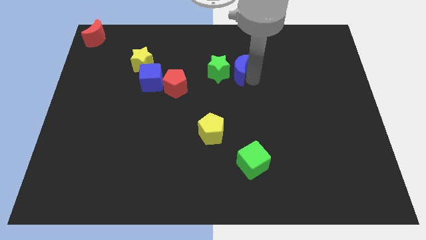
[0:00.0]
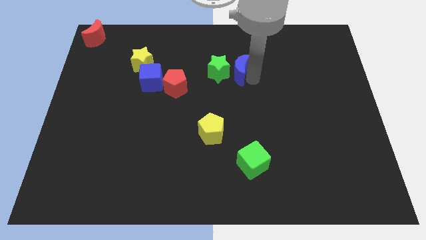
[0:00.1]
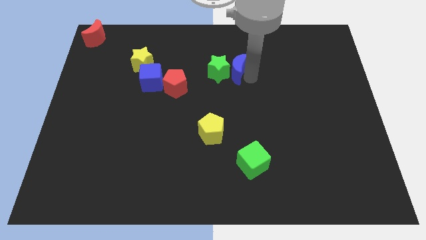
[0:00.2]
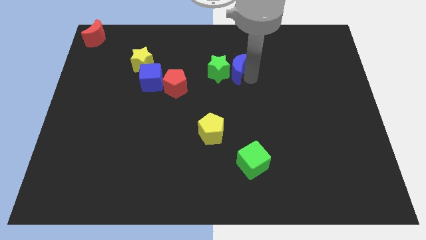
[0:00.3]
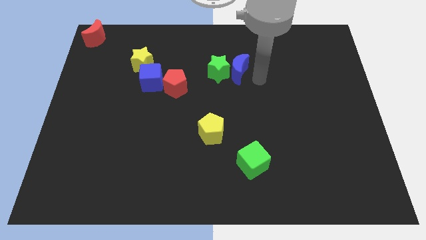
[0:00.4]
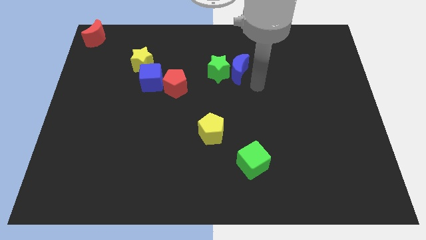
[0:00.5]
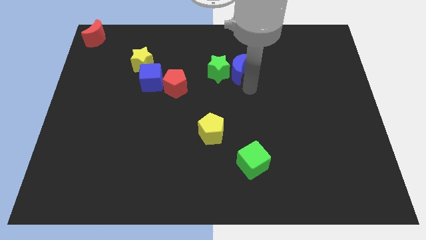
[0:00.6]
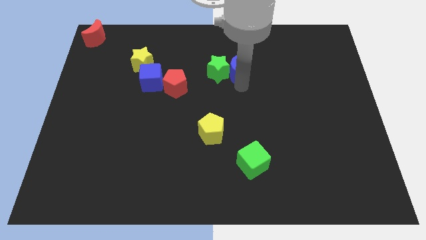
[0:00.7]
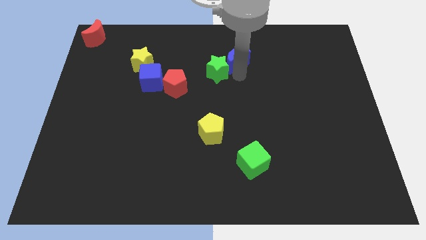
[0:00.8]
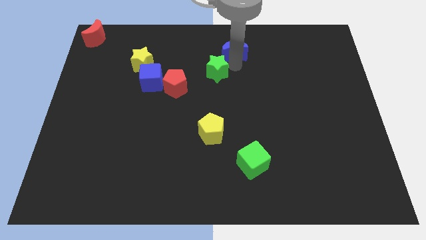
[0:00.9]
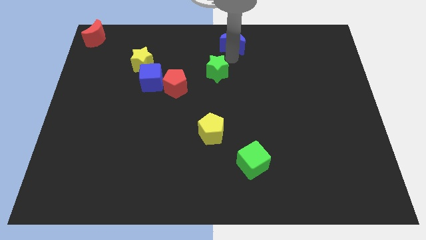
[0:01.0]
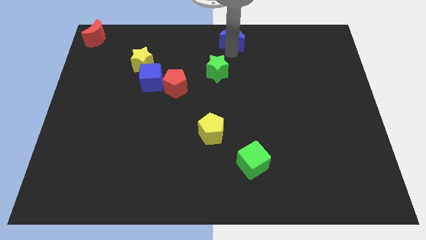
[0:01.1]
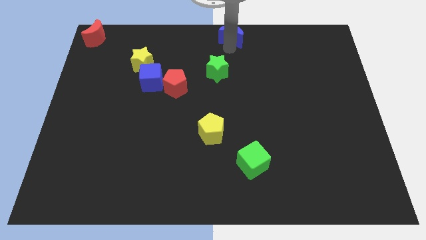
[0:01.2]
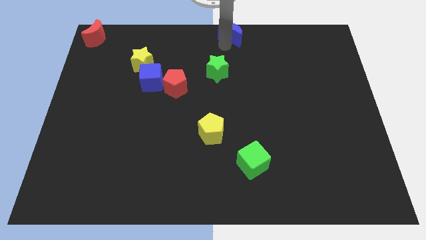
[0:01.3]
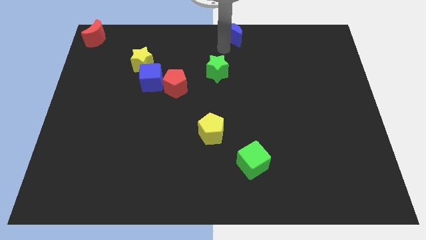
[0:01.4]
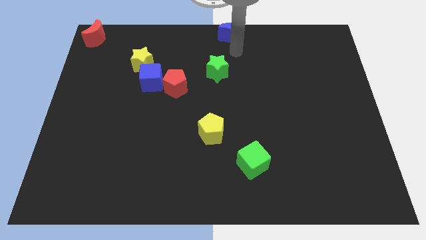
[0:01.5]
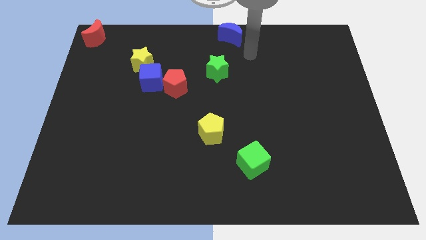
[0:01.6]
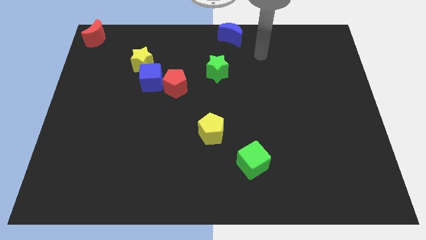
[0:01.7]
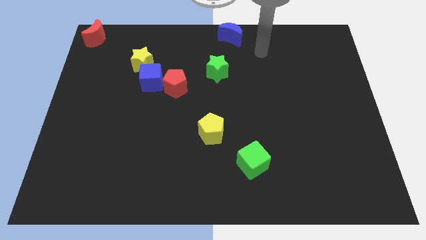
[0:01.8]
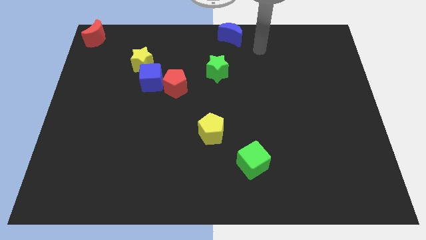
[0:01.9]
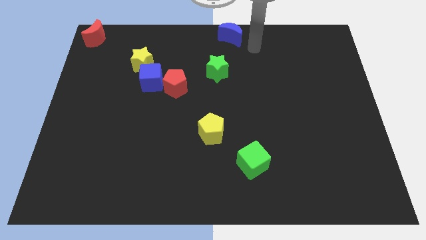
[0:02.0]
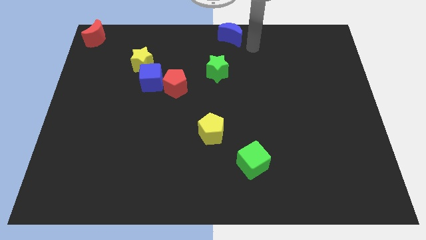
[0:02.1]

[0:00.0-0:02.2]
place the blue crescent at the top center

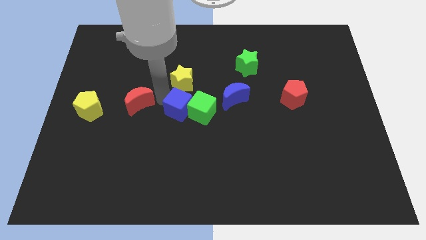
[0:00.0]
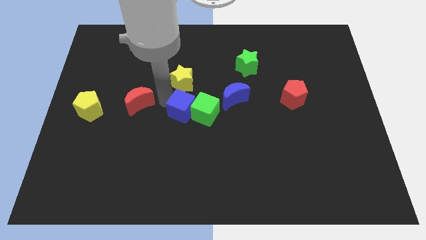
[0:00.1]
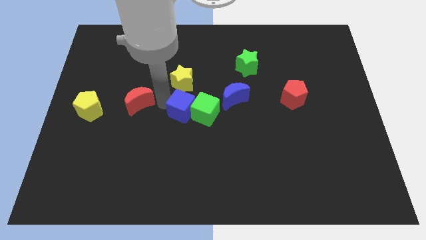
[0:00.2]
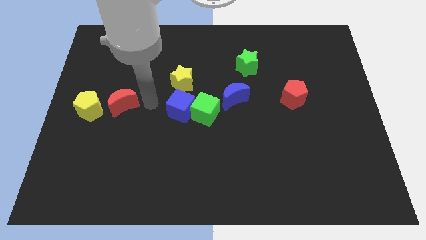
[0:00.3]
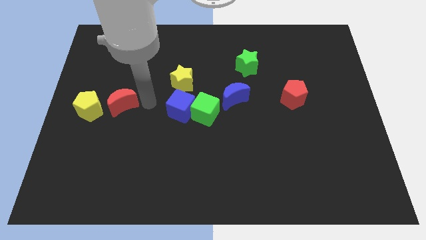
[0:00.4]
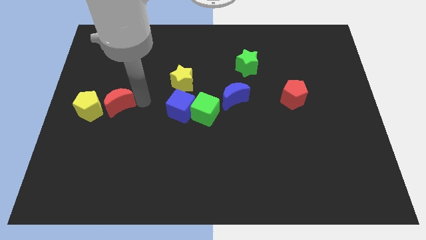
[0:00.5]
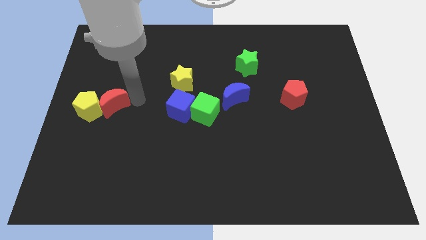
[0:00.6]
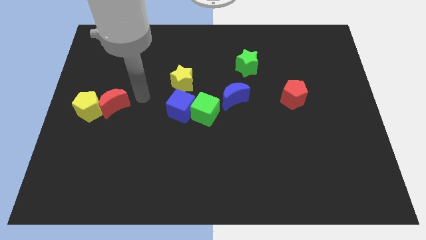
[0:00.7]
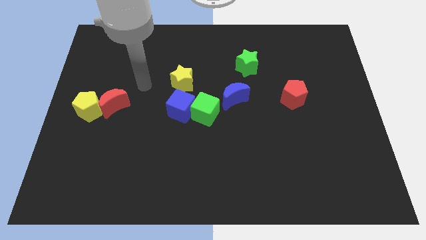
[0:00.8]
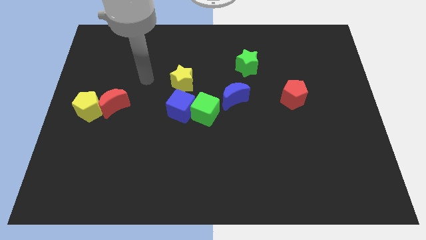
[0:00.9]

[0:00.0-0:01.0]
slightly move the red moon towards the yellow pentagon

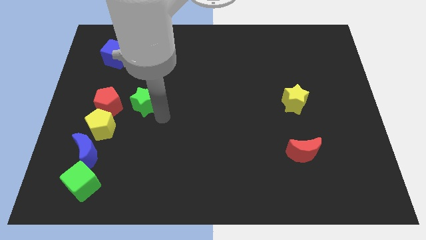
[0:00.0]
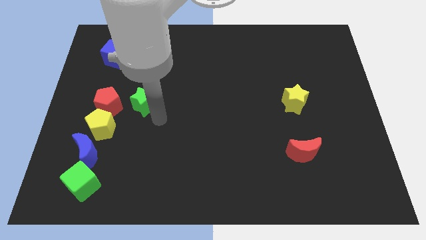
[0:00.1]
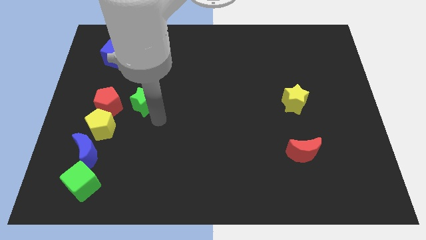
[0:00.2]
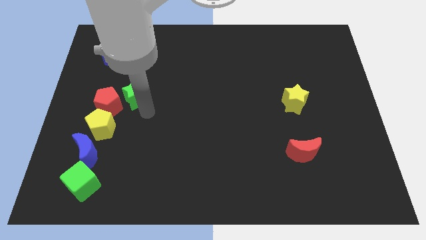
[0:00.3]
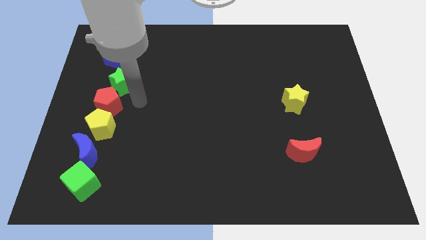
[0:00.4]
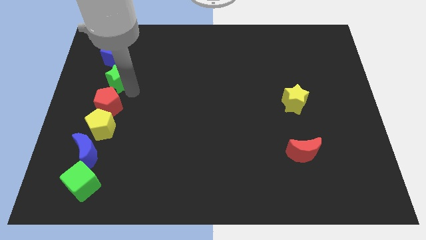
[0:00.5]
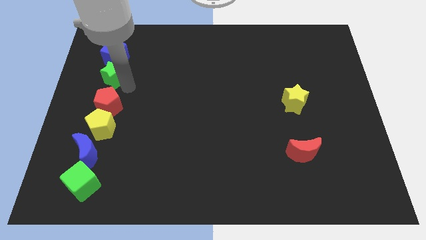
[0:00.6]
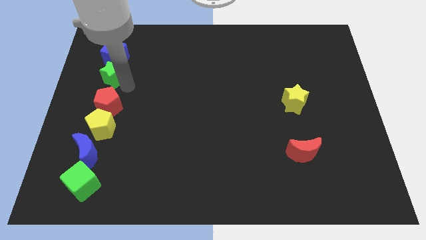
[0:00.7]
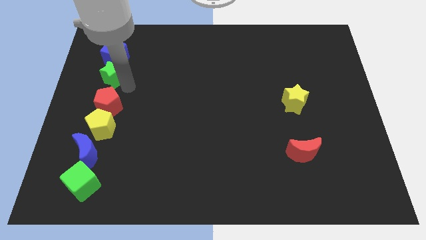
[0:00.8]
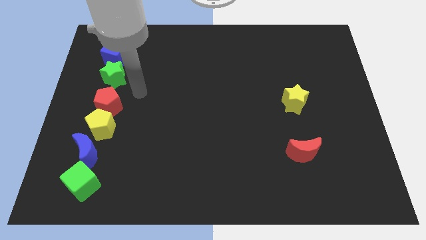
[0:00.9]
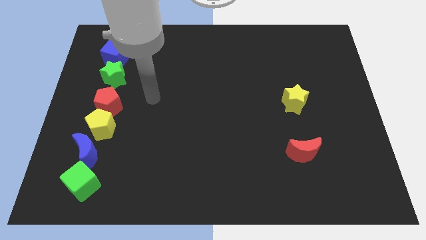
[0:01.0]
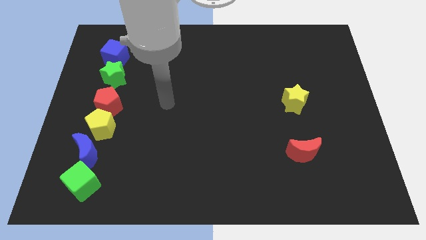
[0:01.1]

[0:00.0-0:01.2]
place the green star above the red pentagon

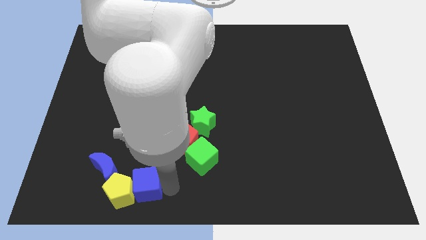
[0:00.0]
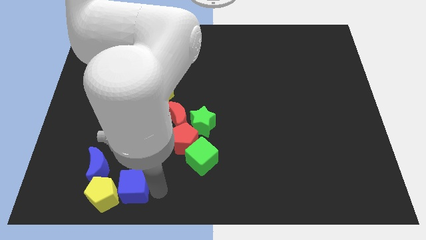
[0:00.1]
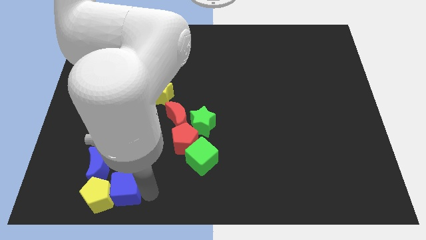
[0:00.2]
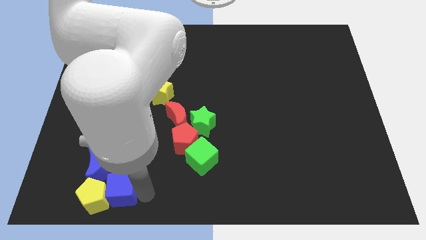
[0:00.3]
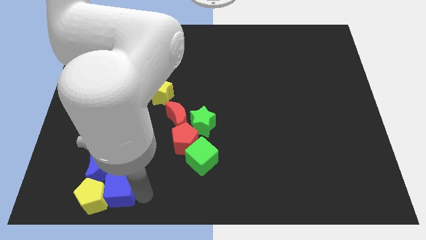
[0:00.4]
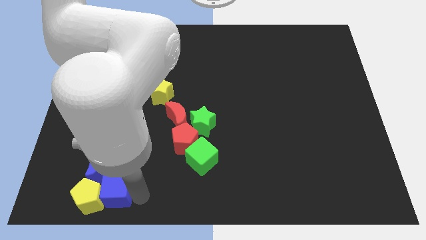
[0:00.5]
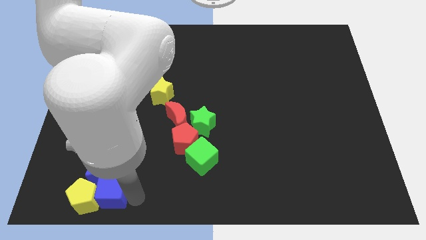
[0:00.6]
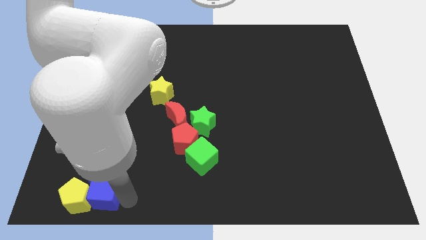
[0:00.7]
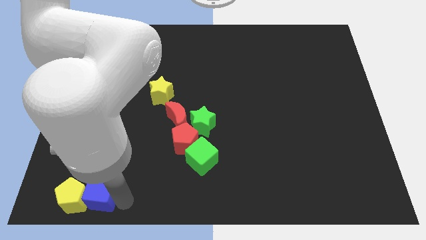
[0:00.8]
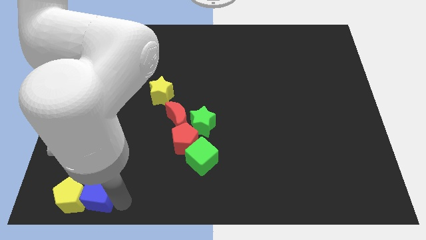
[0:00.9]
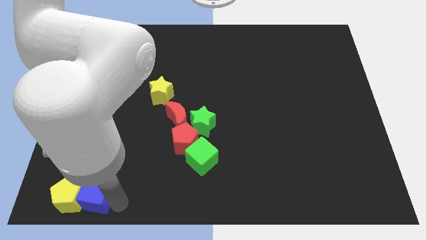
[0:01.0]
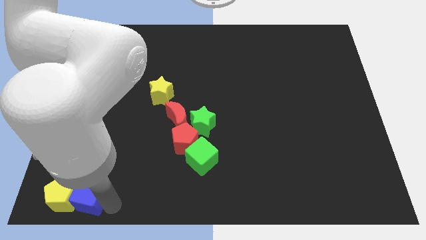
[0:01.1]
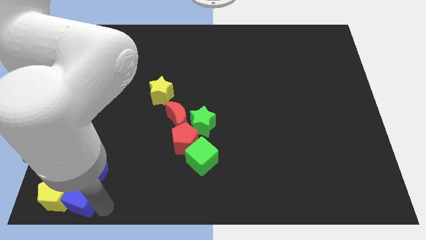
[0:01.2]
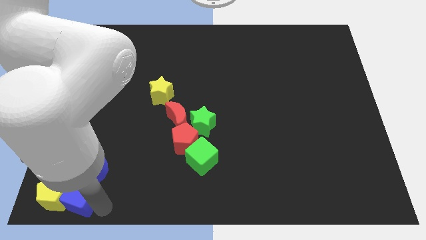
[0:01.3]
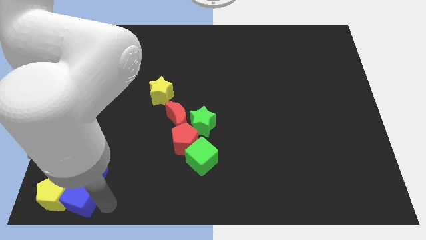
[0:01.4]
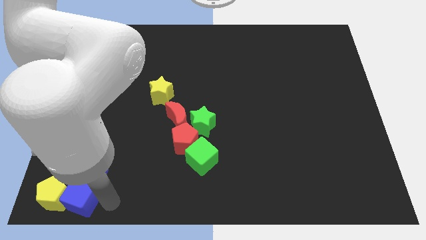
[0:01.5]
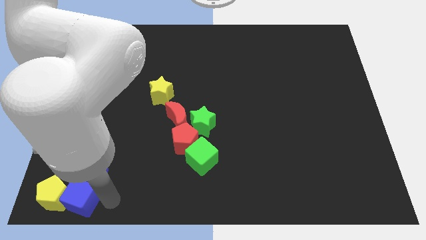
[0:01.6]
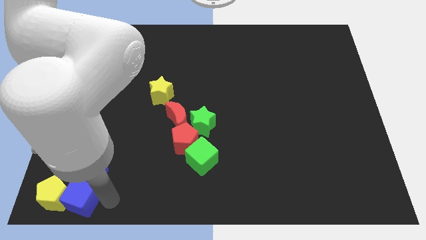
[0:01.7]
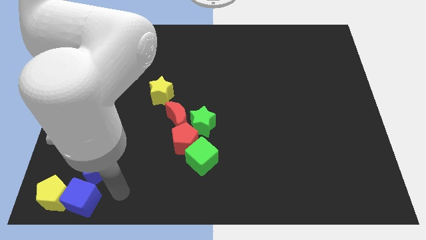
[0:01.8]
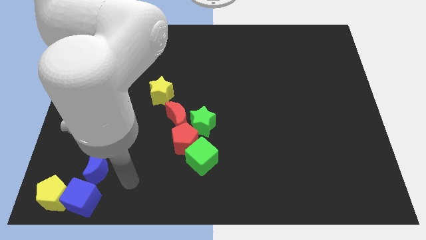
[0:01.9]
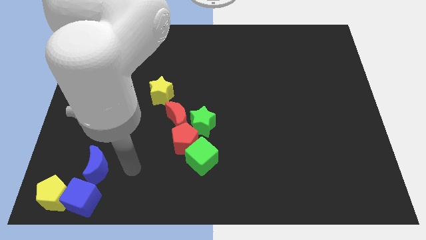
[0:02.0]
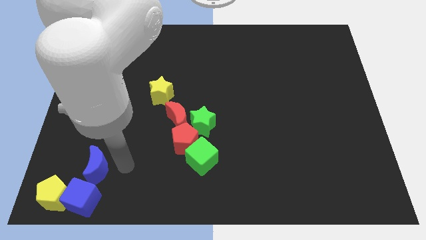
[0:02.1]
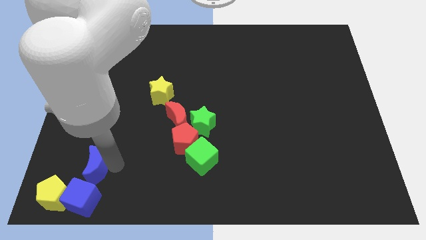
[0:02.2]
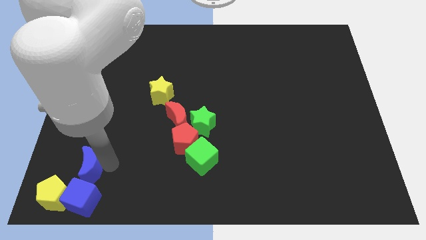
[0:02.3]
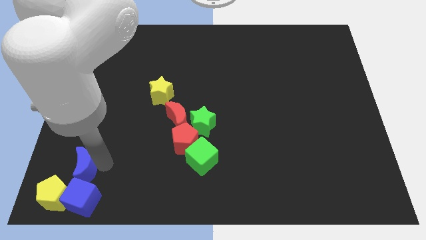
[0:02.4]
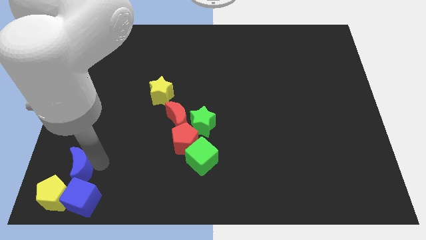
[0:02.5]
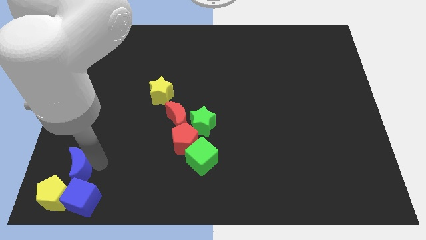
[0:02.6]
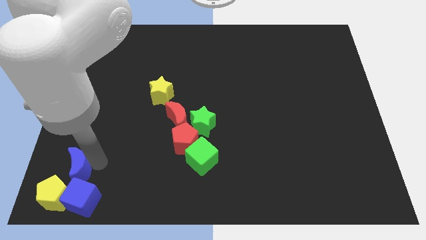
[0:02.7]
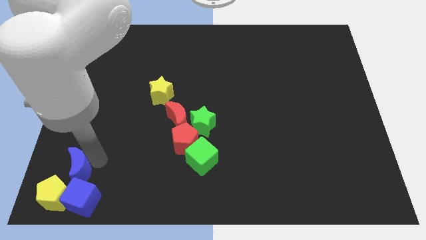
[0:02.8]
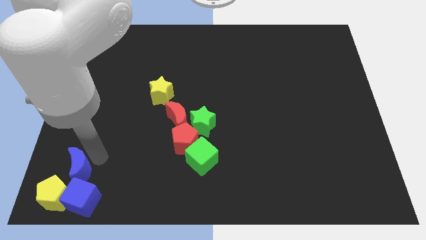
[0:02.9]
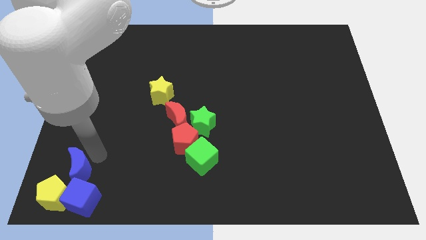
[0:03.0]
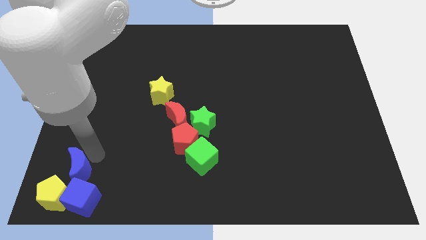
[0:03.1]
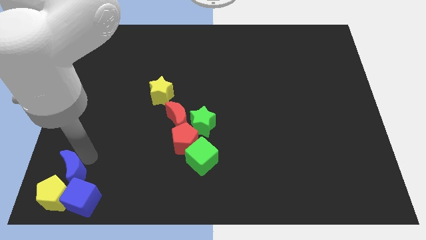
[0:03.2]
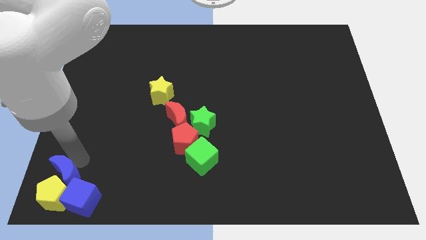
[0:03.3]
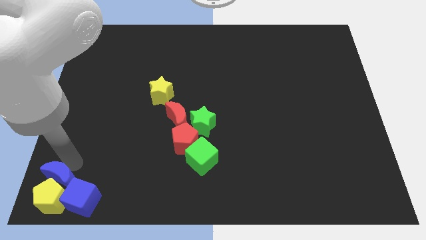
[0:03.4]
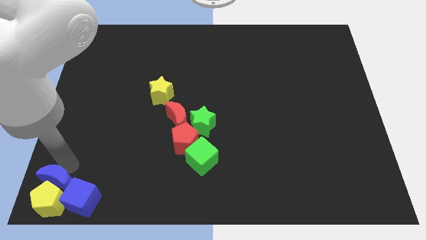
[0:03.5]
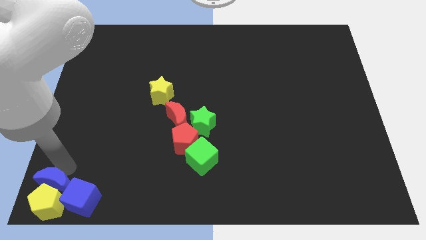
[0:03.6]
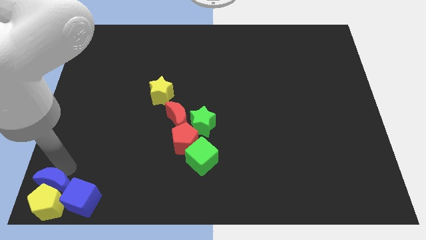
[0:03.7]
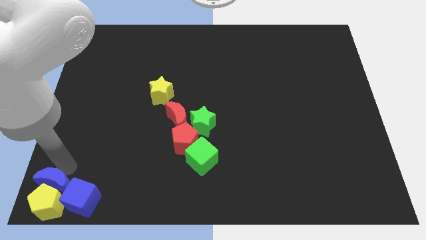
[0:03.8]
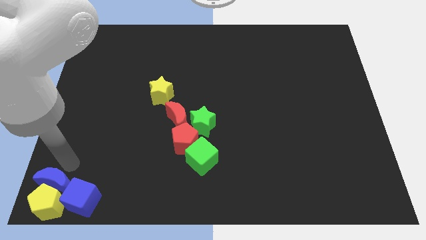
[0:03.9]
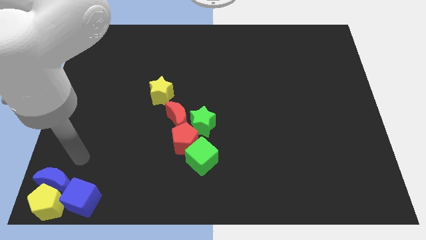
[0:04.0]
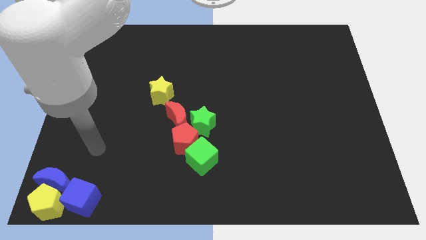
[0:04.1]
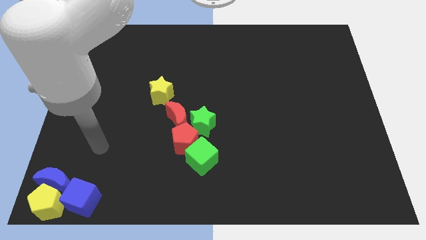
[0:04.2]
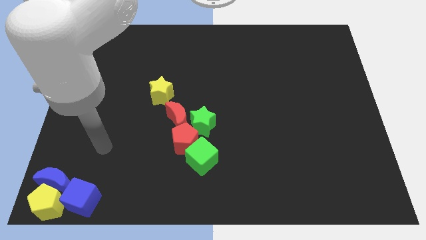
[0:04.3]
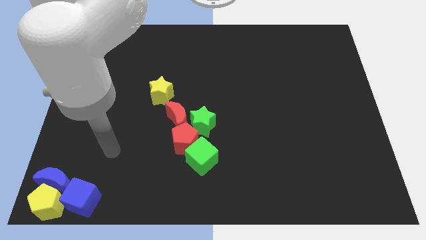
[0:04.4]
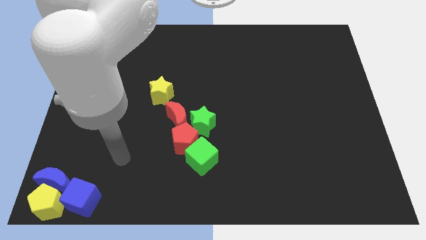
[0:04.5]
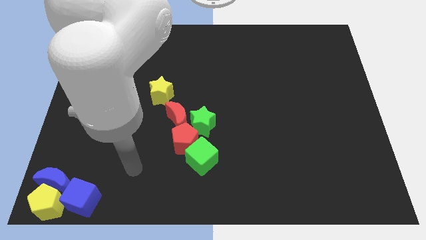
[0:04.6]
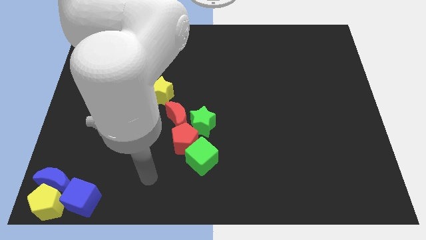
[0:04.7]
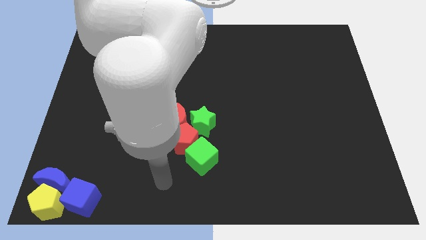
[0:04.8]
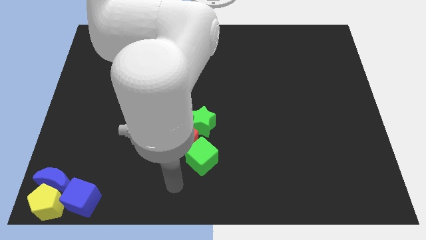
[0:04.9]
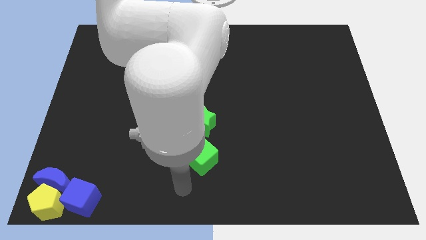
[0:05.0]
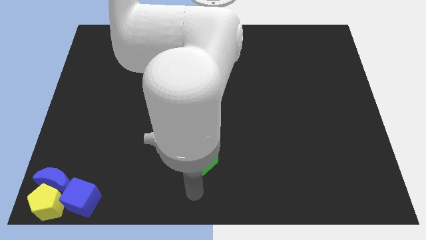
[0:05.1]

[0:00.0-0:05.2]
move blue blocks and yellow pentagon to the bottom left corner of the board
